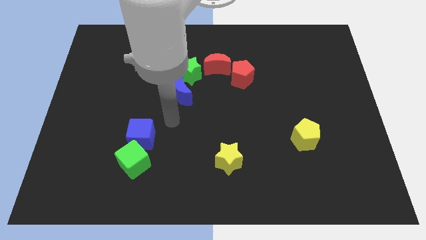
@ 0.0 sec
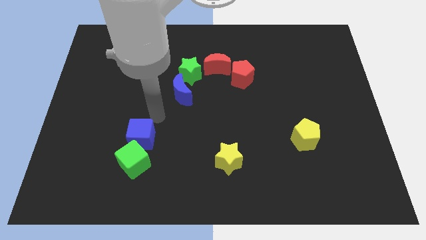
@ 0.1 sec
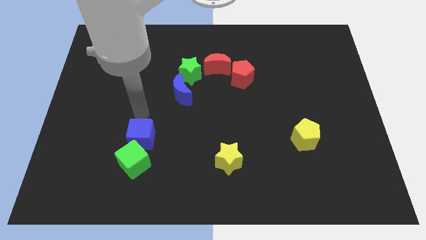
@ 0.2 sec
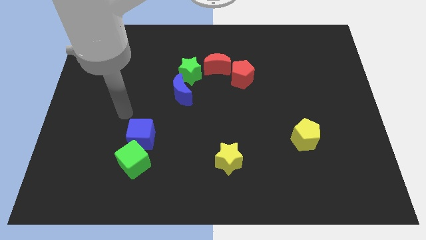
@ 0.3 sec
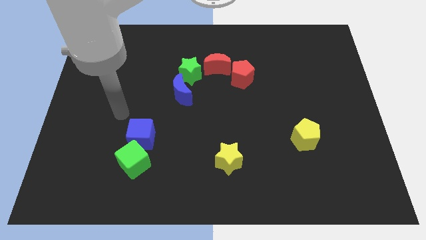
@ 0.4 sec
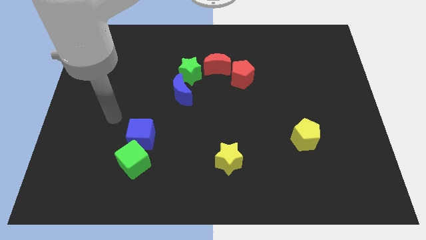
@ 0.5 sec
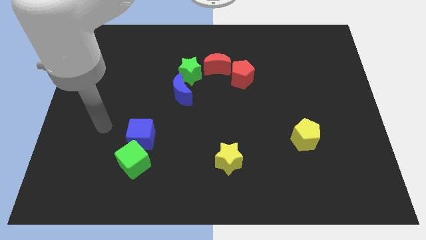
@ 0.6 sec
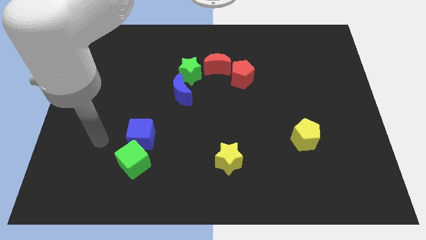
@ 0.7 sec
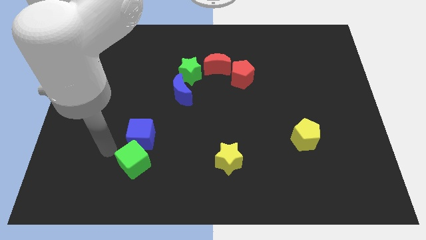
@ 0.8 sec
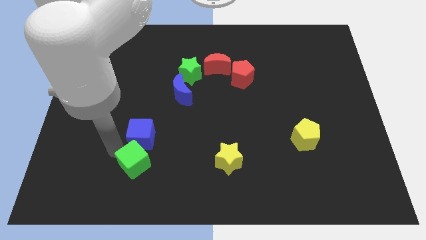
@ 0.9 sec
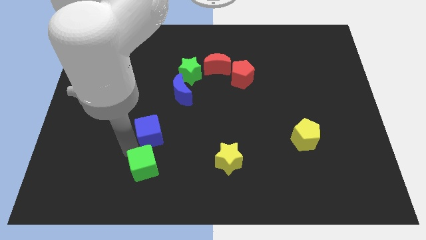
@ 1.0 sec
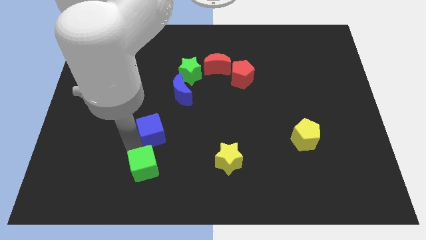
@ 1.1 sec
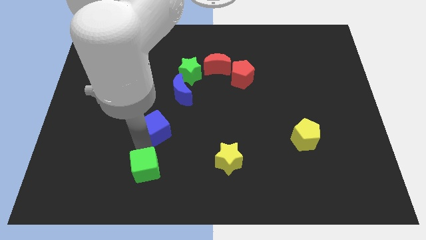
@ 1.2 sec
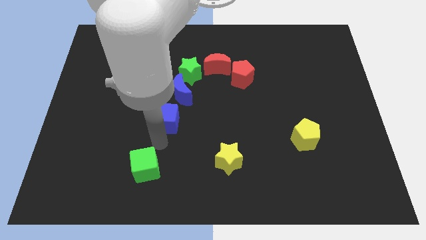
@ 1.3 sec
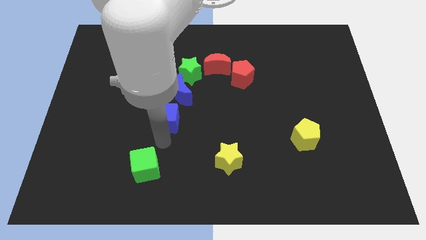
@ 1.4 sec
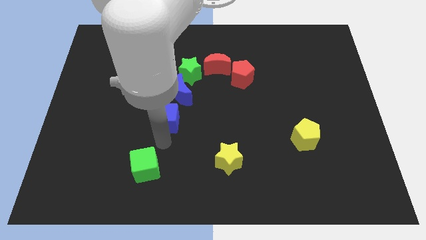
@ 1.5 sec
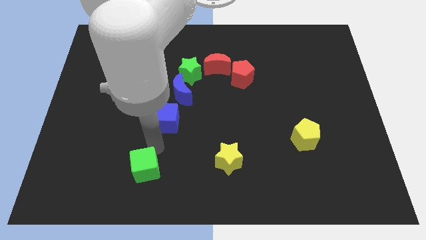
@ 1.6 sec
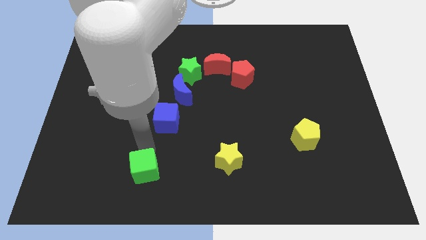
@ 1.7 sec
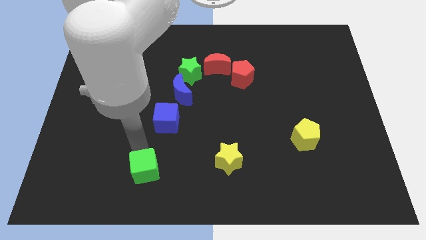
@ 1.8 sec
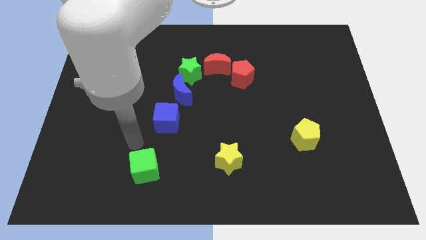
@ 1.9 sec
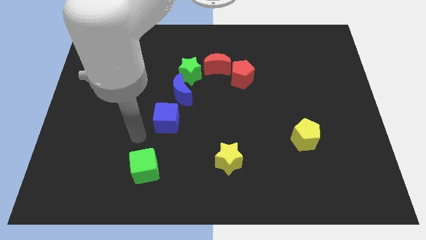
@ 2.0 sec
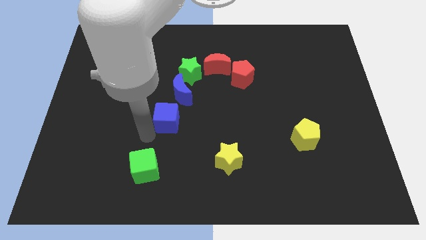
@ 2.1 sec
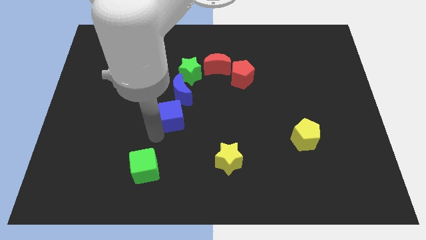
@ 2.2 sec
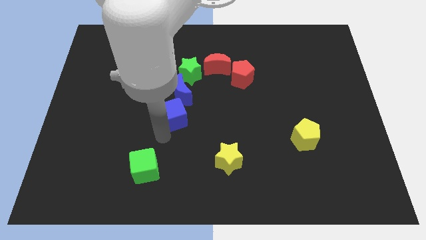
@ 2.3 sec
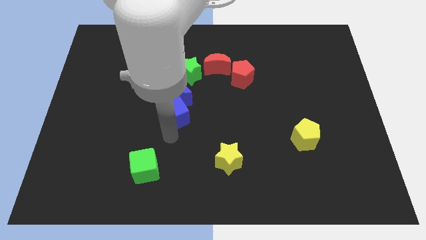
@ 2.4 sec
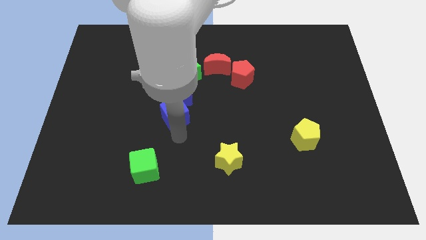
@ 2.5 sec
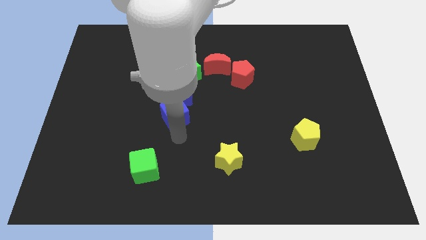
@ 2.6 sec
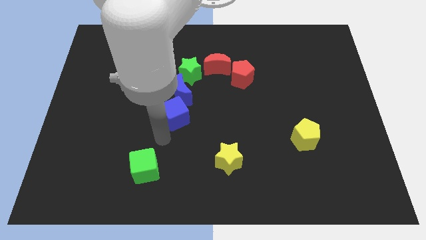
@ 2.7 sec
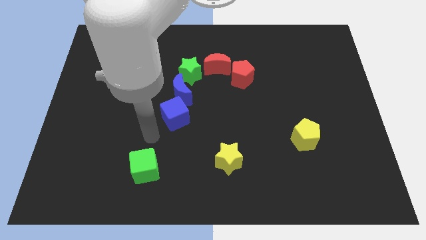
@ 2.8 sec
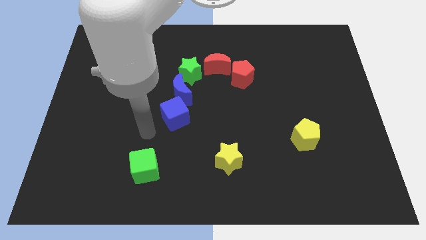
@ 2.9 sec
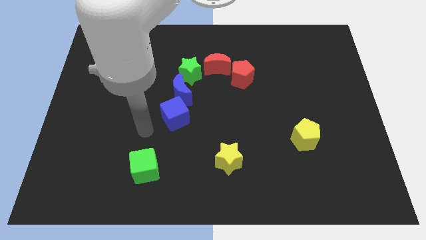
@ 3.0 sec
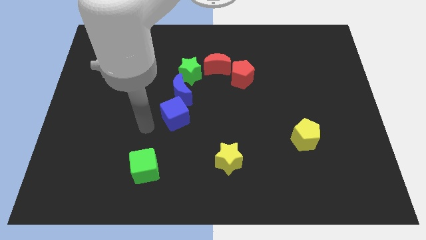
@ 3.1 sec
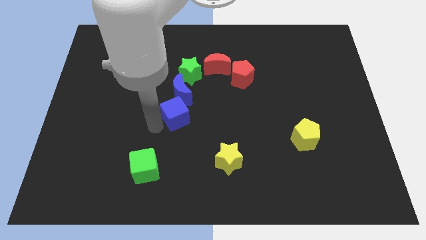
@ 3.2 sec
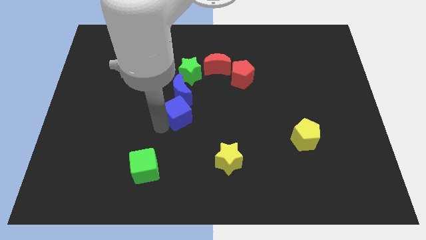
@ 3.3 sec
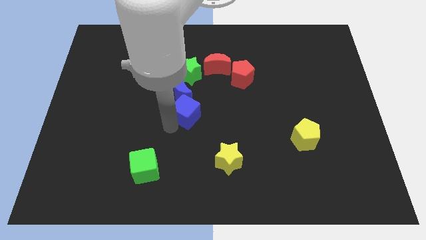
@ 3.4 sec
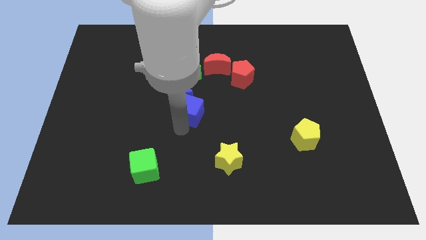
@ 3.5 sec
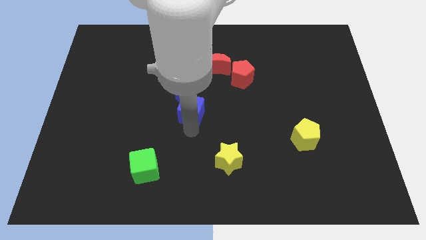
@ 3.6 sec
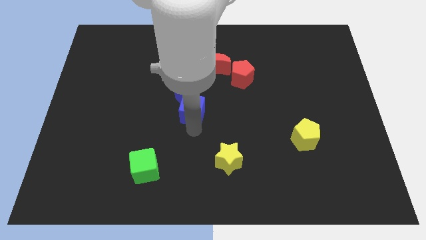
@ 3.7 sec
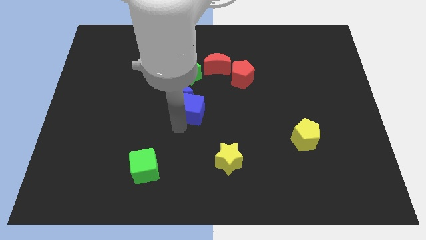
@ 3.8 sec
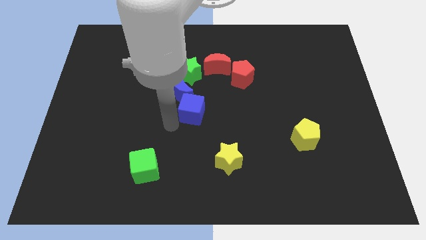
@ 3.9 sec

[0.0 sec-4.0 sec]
place the blue cube below the blue crescent

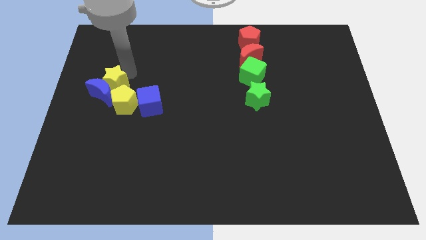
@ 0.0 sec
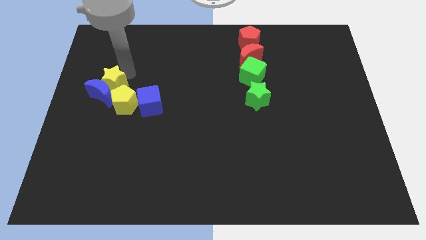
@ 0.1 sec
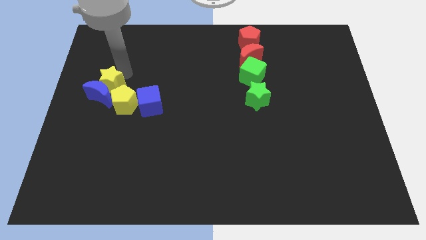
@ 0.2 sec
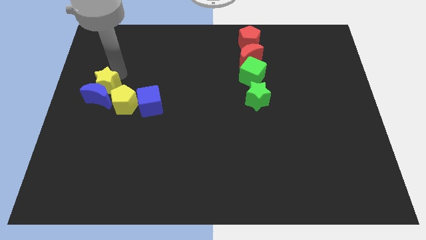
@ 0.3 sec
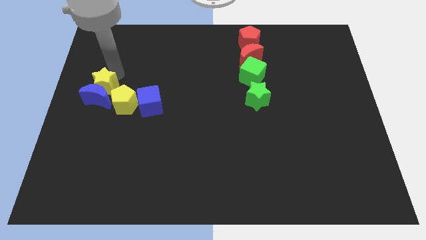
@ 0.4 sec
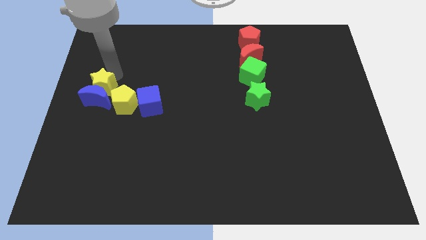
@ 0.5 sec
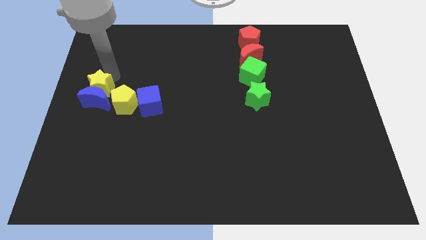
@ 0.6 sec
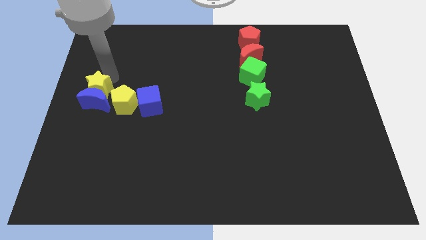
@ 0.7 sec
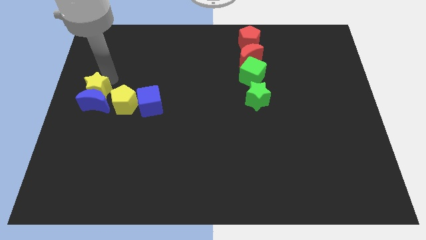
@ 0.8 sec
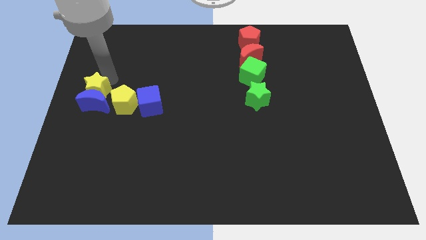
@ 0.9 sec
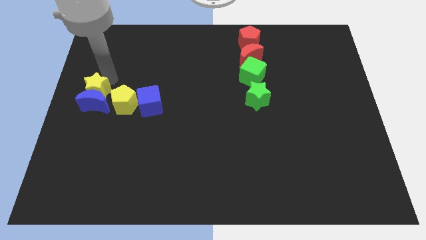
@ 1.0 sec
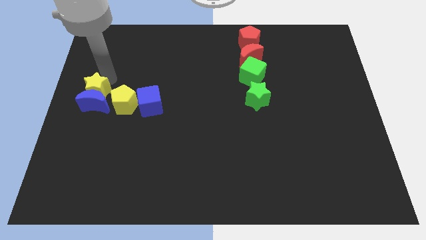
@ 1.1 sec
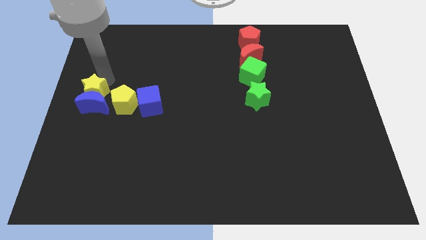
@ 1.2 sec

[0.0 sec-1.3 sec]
push the blue moon with the yellow star

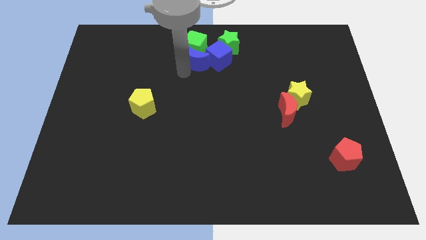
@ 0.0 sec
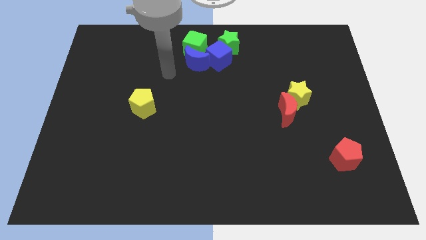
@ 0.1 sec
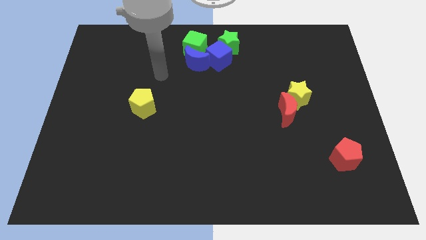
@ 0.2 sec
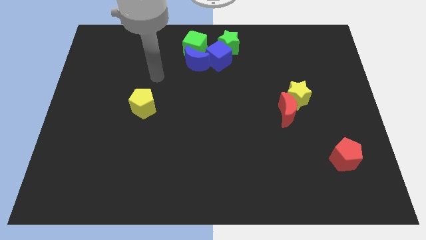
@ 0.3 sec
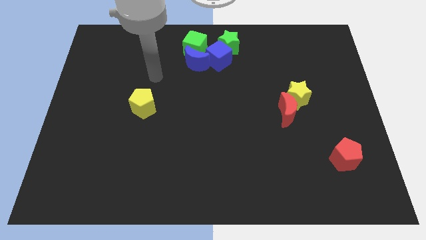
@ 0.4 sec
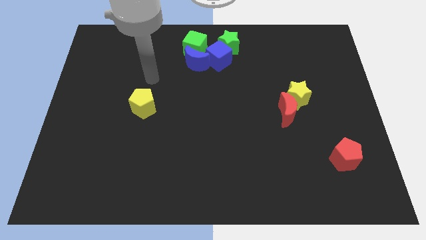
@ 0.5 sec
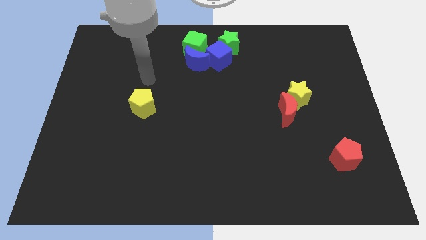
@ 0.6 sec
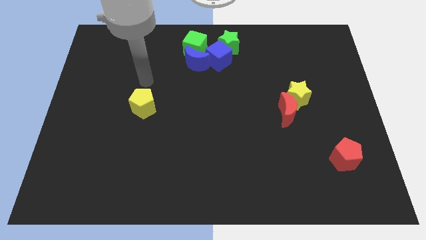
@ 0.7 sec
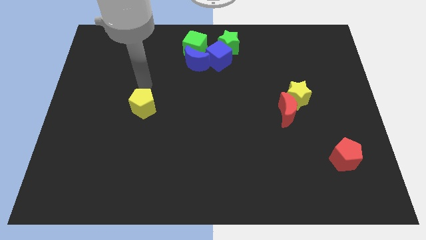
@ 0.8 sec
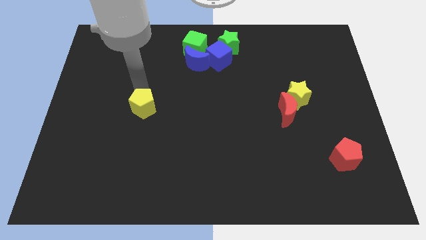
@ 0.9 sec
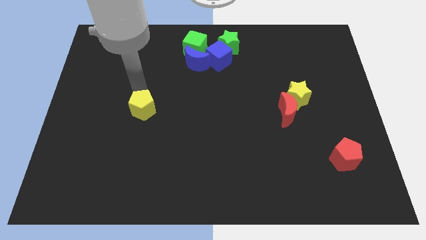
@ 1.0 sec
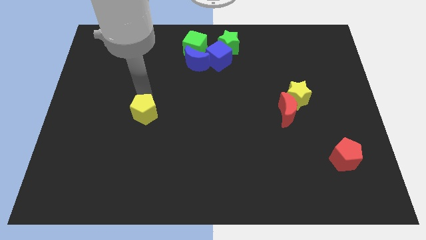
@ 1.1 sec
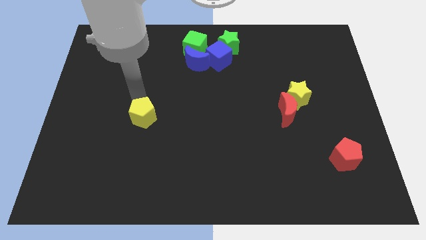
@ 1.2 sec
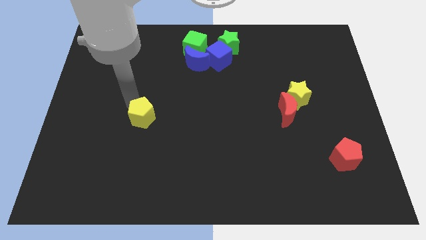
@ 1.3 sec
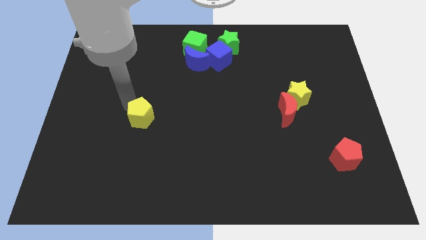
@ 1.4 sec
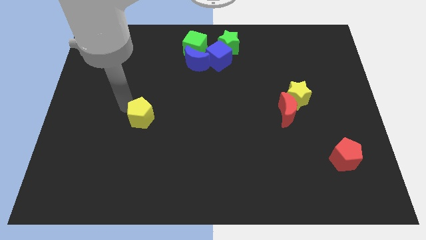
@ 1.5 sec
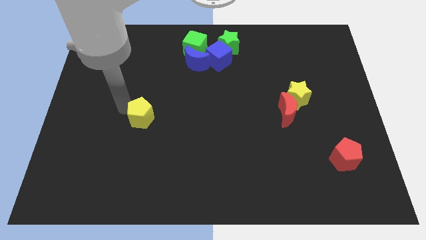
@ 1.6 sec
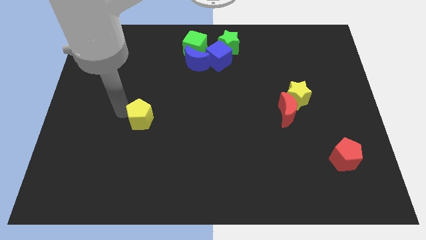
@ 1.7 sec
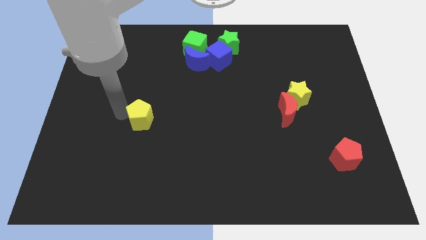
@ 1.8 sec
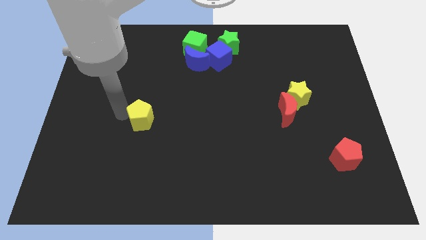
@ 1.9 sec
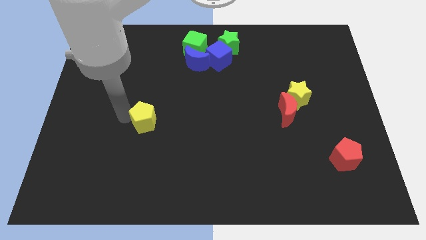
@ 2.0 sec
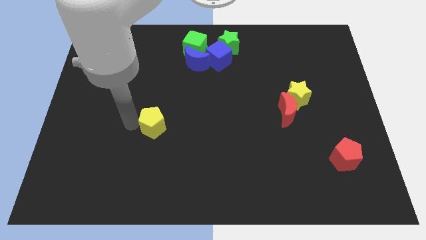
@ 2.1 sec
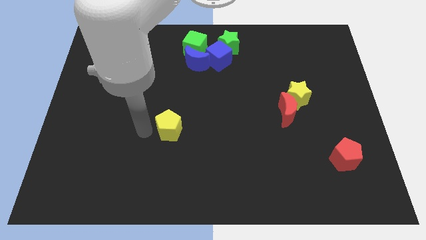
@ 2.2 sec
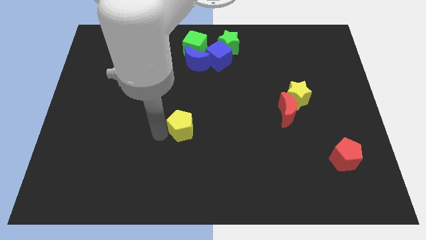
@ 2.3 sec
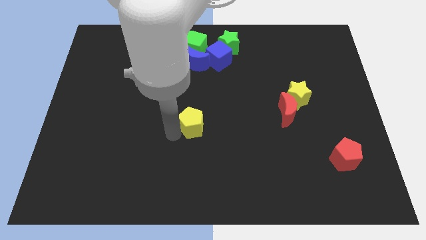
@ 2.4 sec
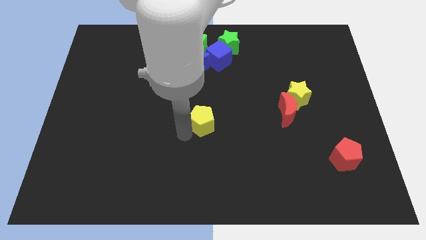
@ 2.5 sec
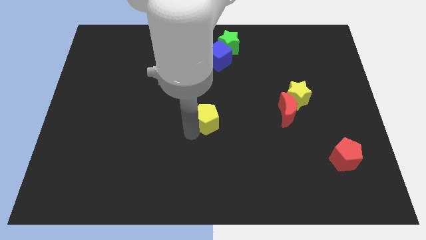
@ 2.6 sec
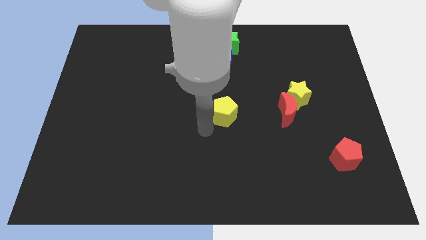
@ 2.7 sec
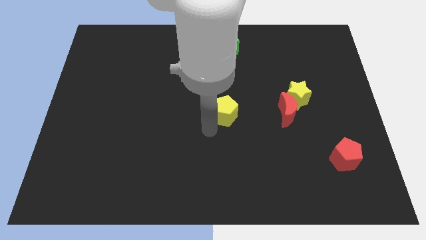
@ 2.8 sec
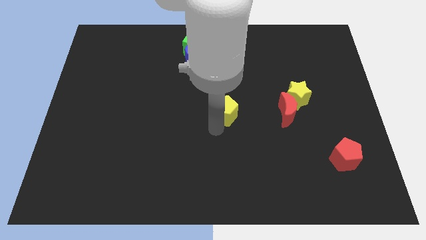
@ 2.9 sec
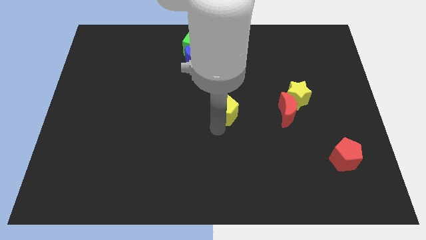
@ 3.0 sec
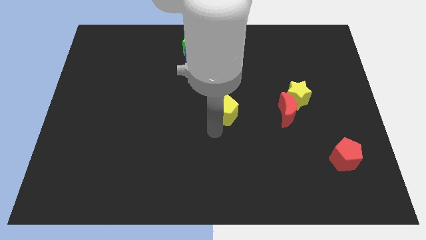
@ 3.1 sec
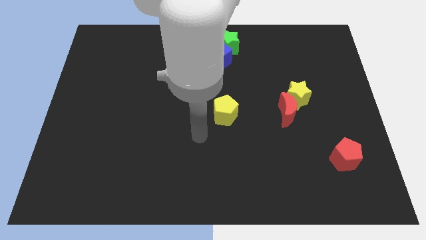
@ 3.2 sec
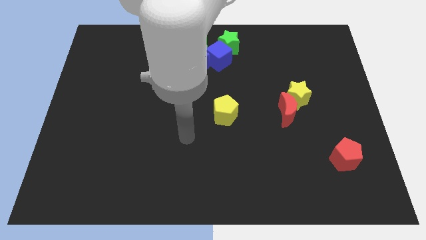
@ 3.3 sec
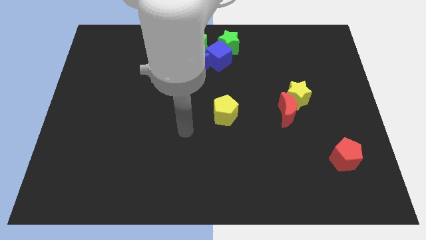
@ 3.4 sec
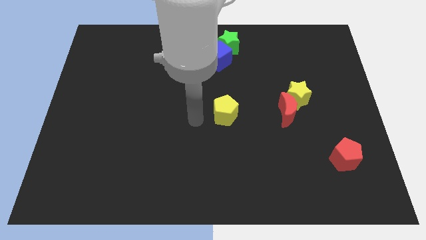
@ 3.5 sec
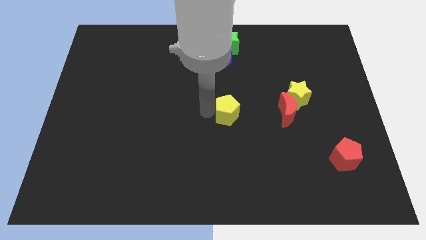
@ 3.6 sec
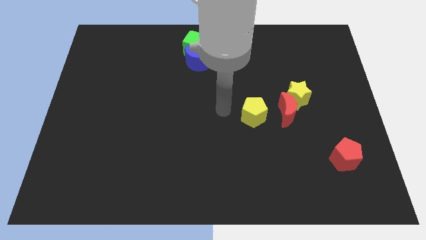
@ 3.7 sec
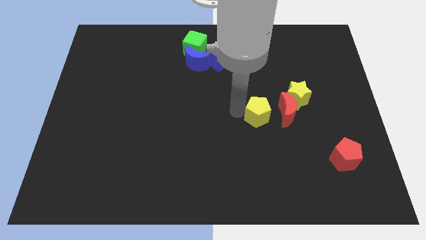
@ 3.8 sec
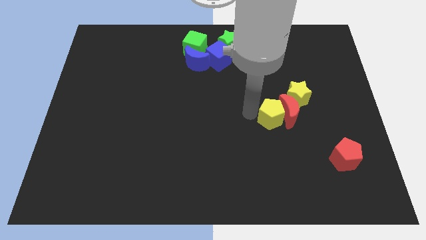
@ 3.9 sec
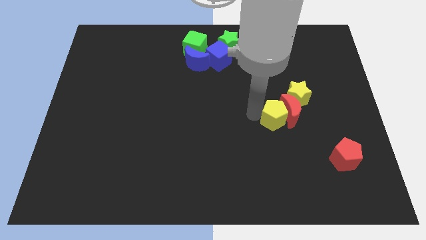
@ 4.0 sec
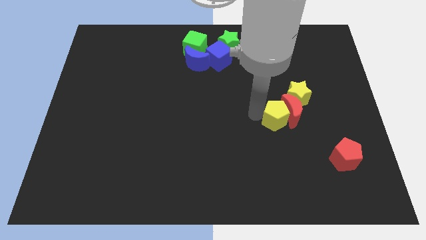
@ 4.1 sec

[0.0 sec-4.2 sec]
move your arm away from the blue moon
